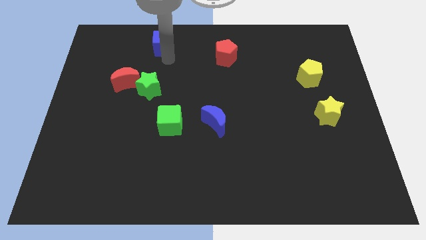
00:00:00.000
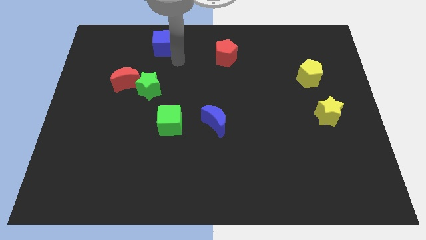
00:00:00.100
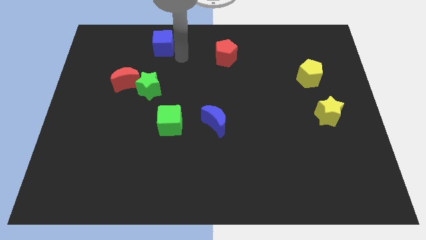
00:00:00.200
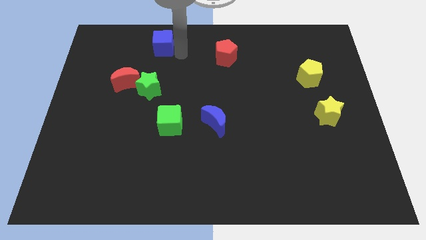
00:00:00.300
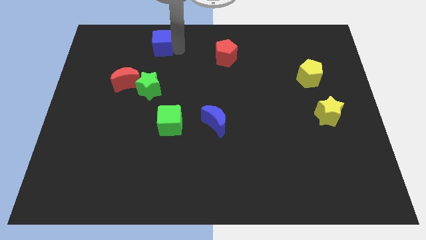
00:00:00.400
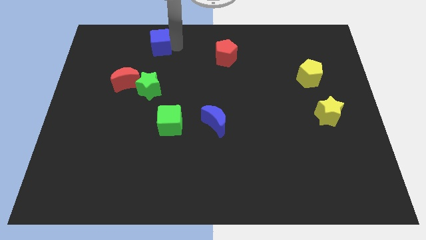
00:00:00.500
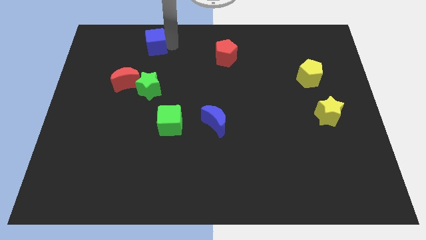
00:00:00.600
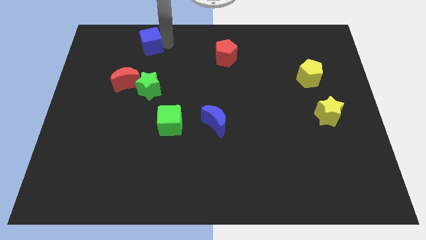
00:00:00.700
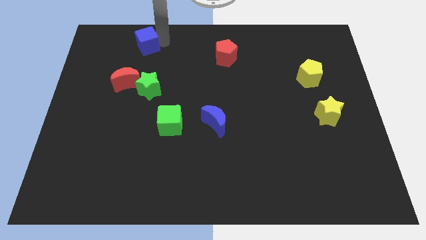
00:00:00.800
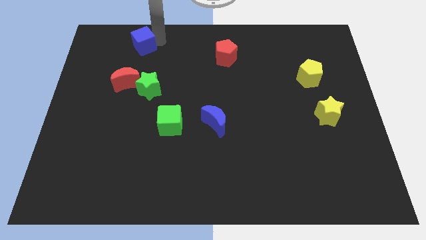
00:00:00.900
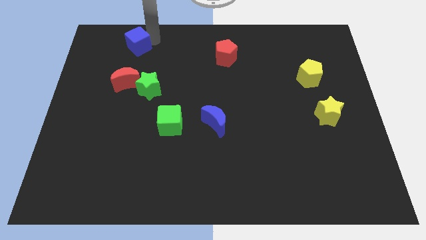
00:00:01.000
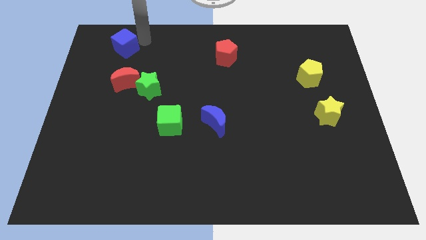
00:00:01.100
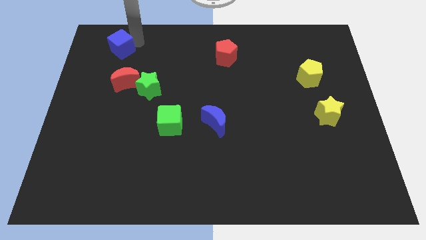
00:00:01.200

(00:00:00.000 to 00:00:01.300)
move the blue cube above the red moon

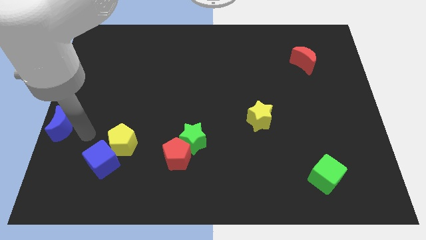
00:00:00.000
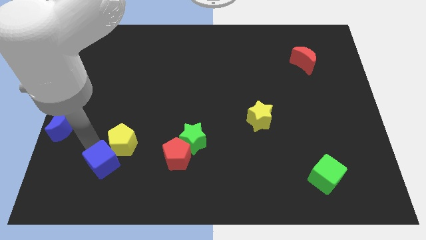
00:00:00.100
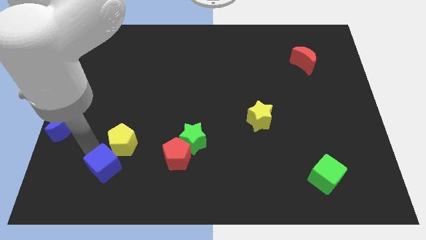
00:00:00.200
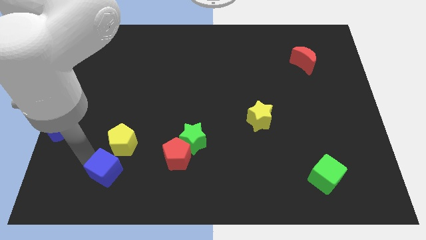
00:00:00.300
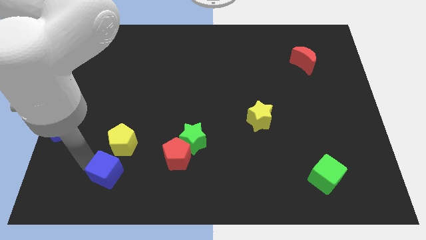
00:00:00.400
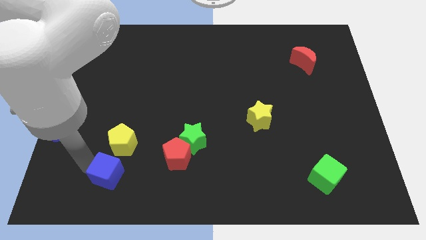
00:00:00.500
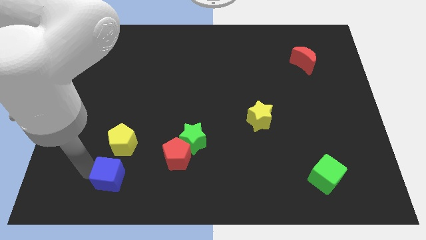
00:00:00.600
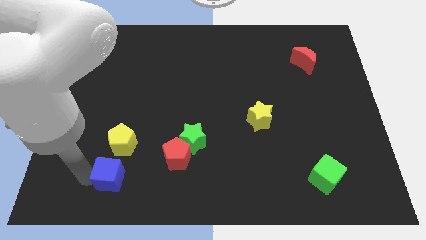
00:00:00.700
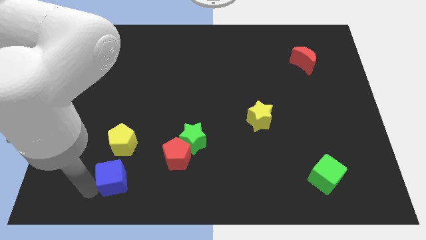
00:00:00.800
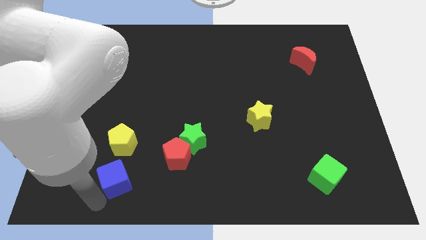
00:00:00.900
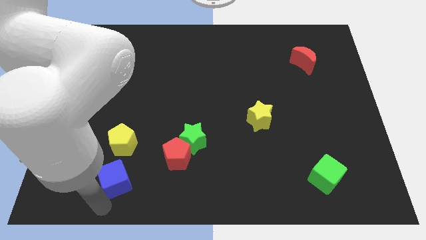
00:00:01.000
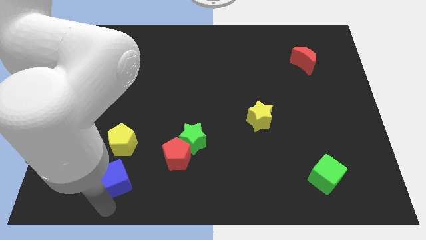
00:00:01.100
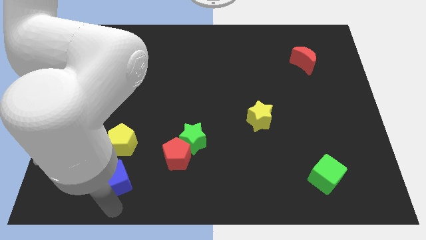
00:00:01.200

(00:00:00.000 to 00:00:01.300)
place the blue cube to the bottom side of the yellow pentagon

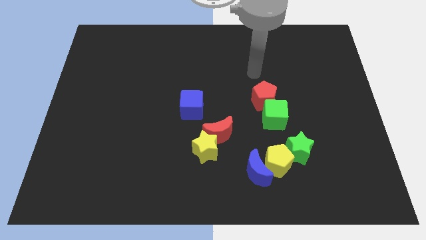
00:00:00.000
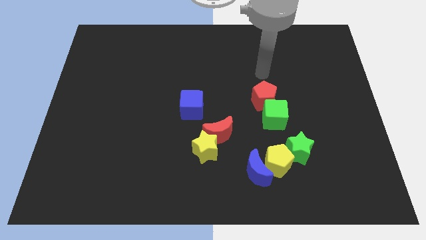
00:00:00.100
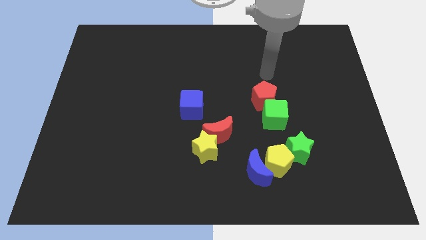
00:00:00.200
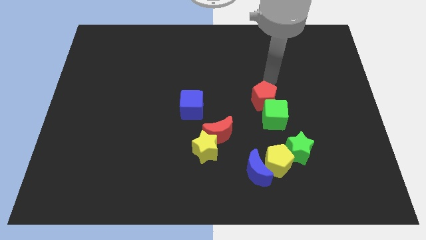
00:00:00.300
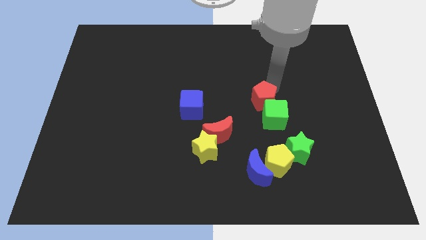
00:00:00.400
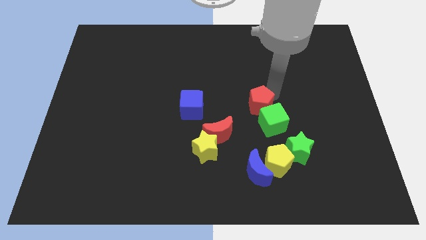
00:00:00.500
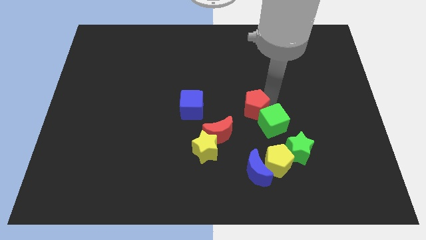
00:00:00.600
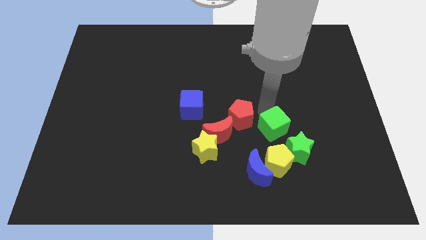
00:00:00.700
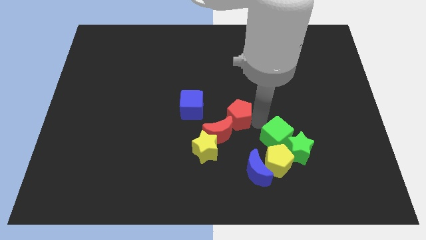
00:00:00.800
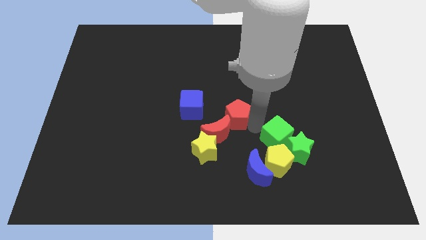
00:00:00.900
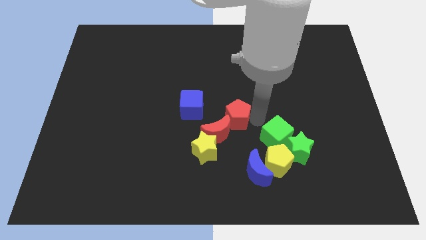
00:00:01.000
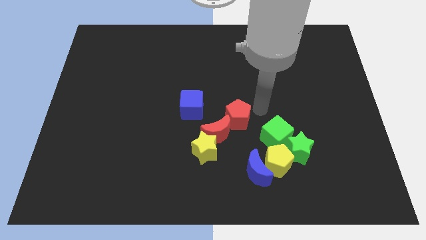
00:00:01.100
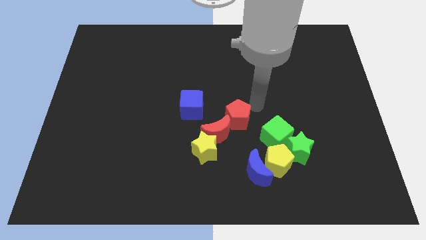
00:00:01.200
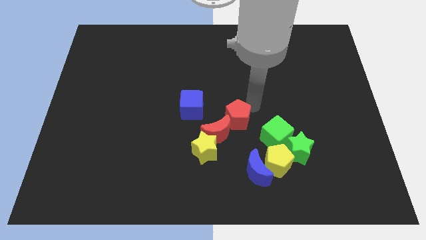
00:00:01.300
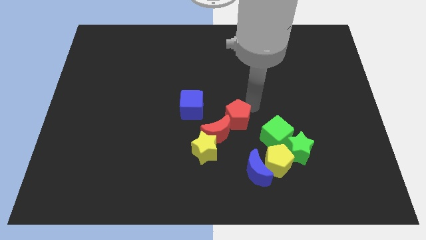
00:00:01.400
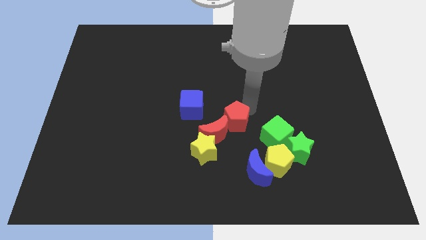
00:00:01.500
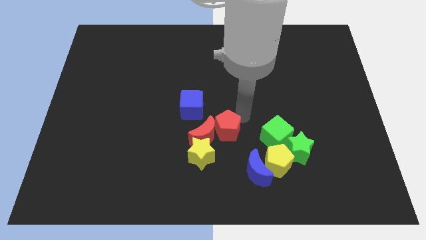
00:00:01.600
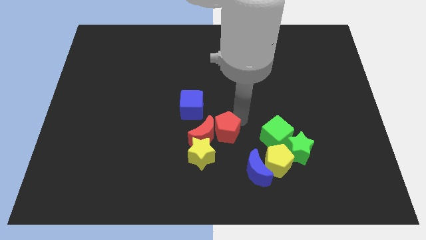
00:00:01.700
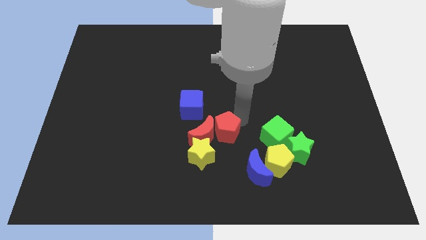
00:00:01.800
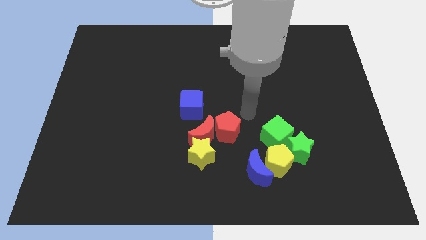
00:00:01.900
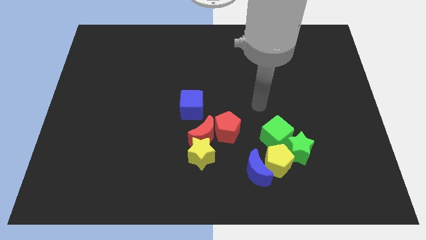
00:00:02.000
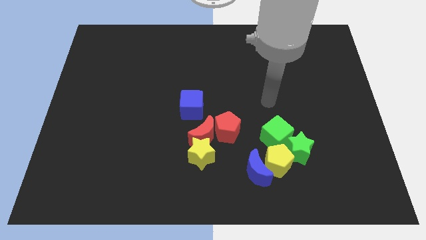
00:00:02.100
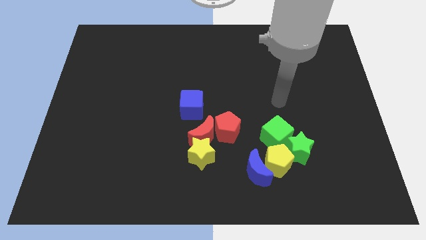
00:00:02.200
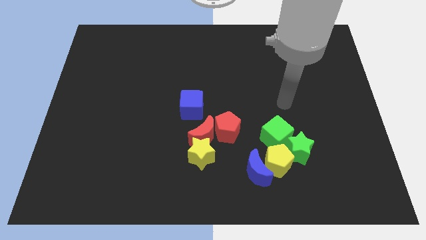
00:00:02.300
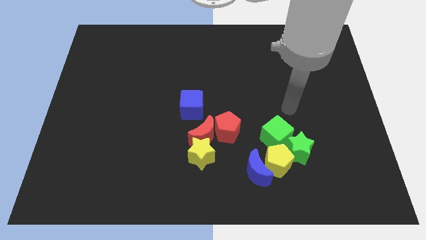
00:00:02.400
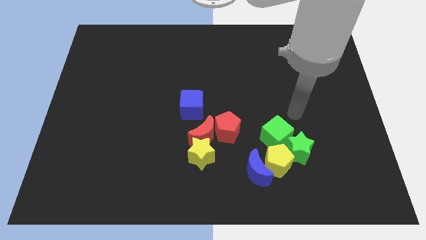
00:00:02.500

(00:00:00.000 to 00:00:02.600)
move red pentagon right beside the red moon

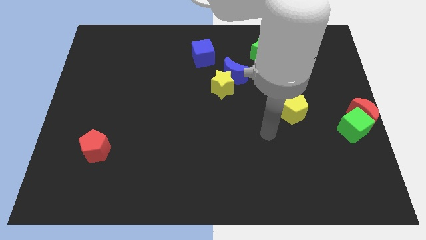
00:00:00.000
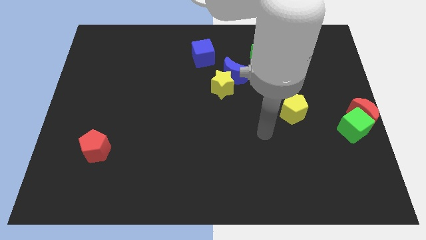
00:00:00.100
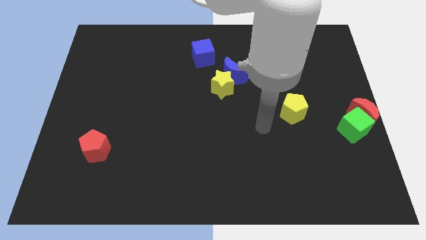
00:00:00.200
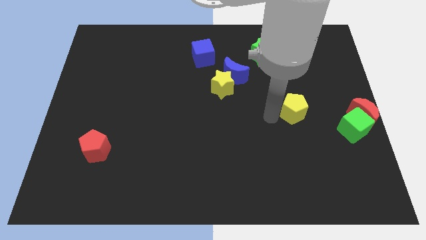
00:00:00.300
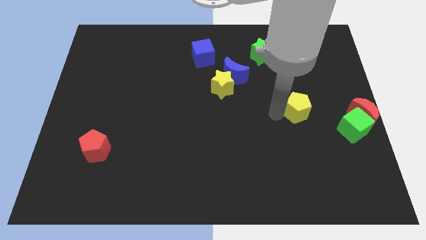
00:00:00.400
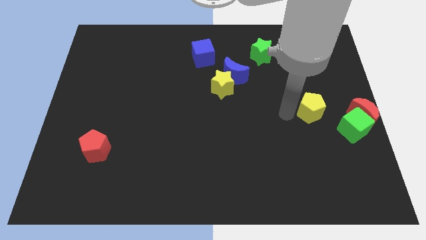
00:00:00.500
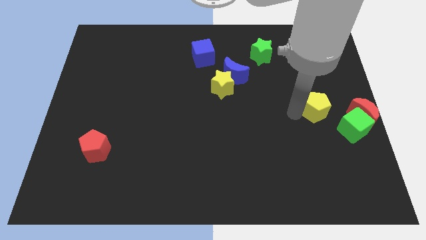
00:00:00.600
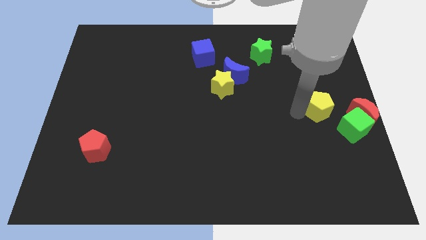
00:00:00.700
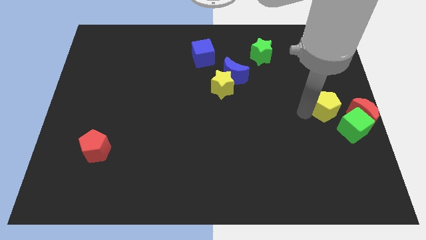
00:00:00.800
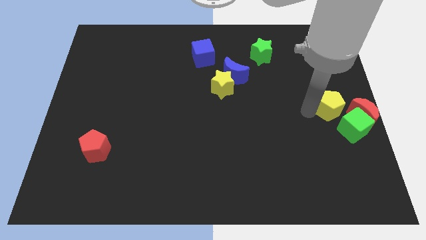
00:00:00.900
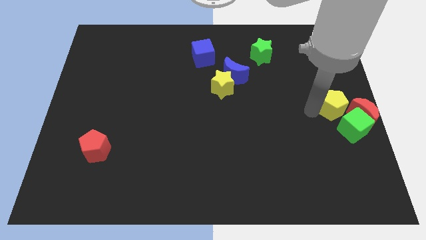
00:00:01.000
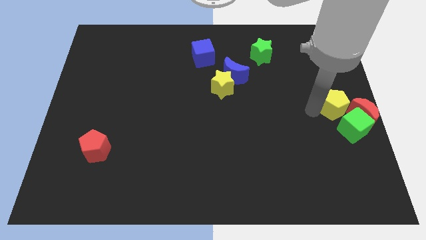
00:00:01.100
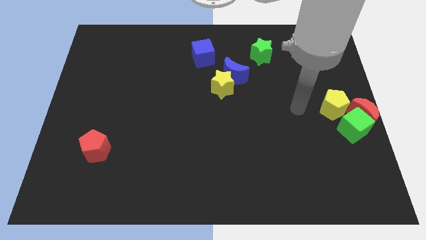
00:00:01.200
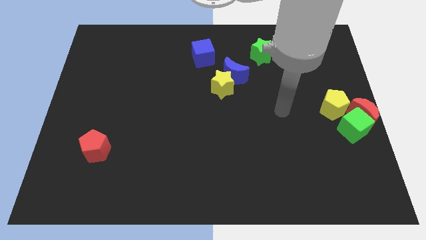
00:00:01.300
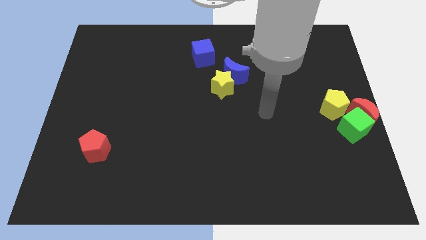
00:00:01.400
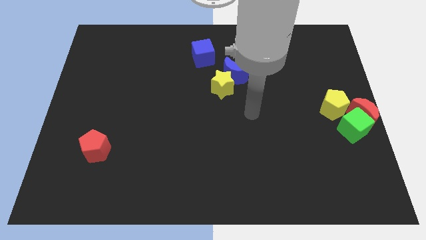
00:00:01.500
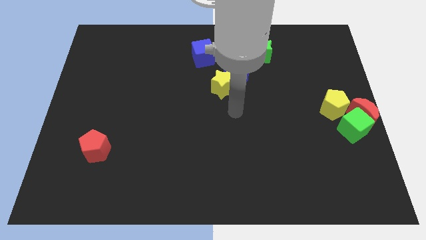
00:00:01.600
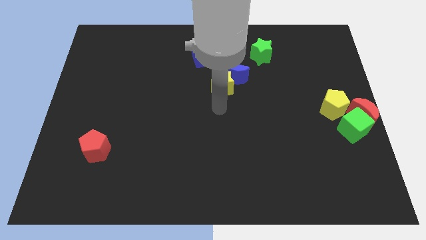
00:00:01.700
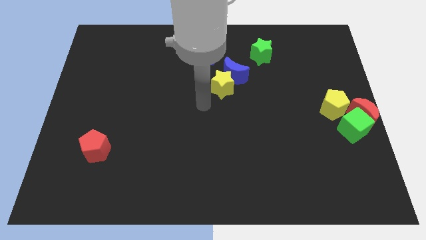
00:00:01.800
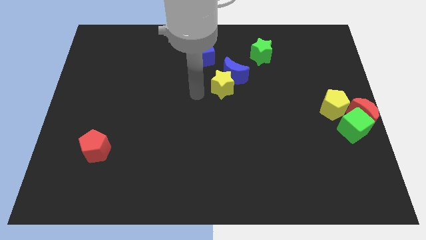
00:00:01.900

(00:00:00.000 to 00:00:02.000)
push the yellow pentagon towards the red crescent

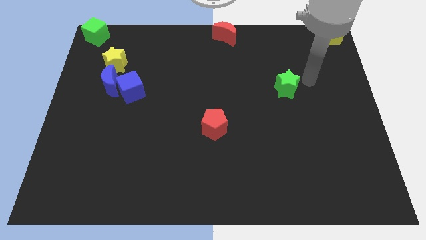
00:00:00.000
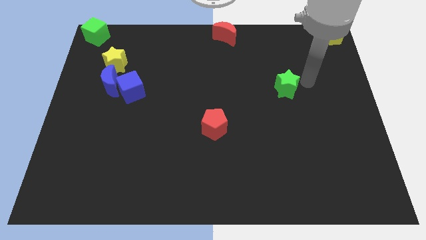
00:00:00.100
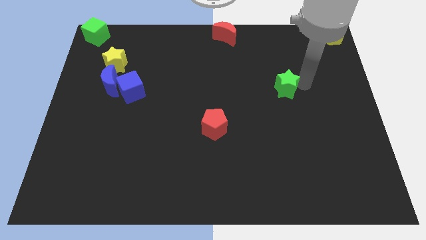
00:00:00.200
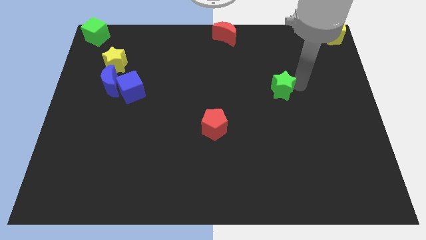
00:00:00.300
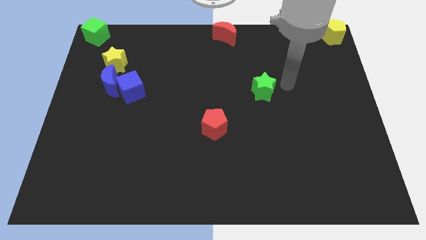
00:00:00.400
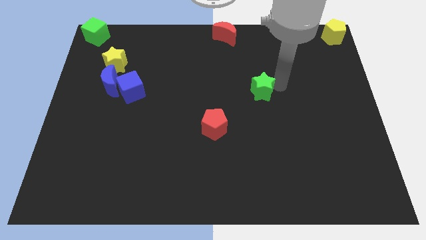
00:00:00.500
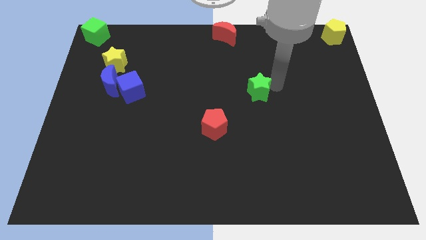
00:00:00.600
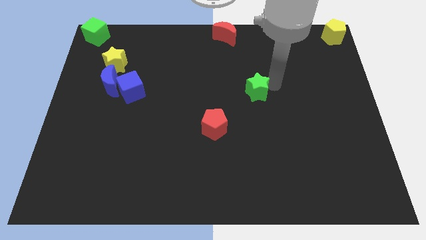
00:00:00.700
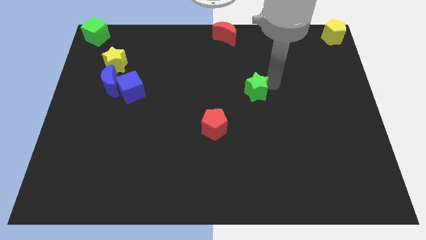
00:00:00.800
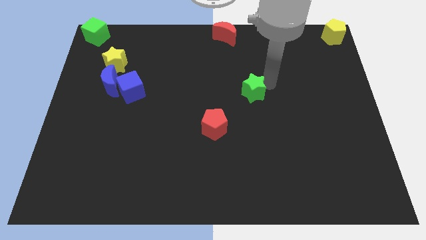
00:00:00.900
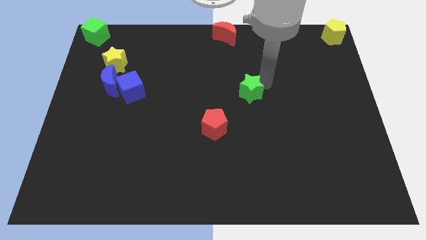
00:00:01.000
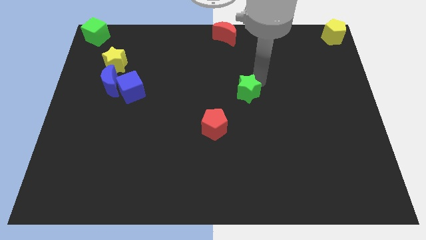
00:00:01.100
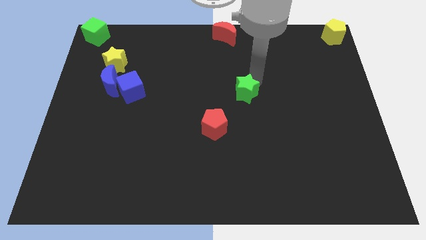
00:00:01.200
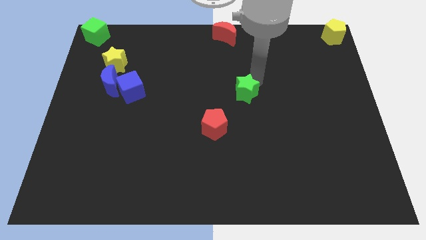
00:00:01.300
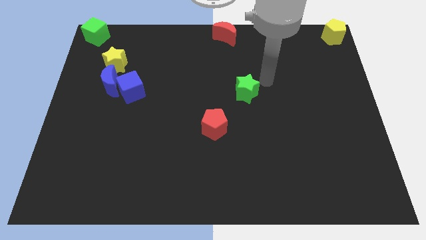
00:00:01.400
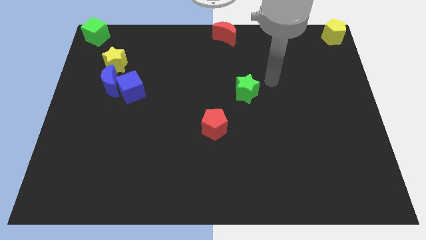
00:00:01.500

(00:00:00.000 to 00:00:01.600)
slightly push the green star to the left side of the board

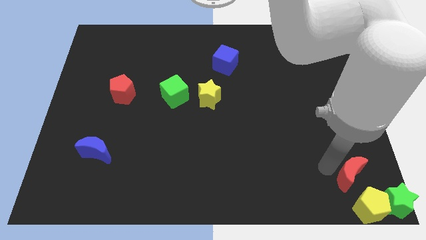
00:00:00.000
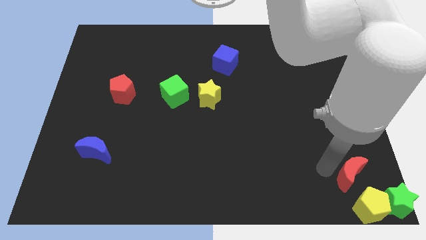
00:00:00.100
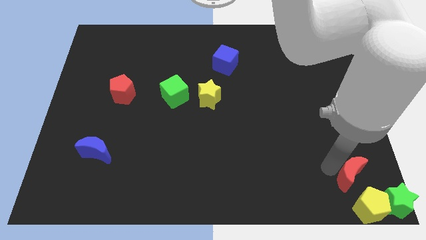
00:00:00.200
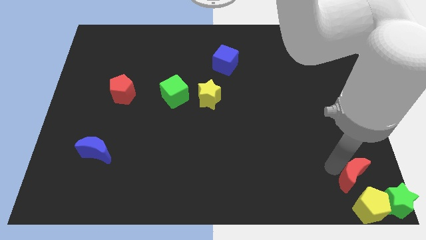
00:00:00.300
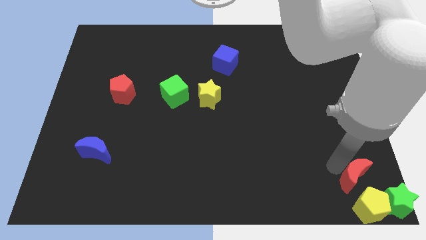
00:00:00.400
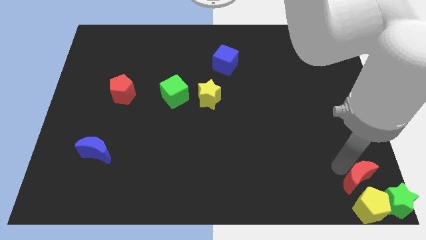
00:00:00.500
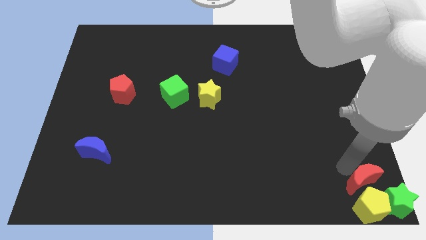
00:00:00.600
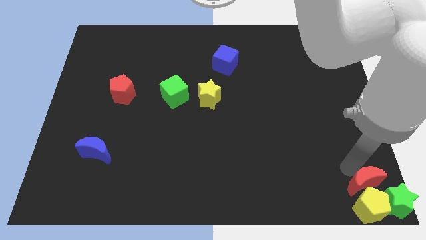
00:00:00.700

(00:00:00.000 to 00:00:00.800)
place the red moon to the top of yellow pentagon
